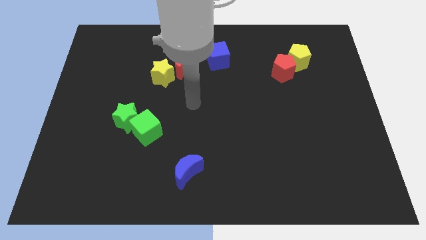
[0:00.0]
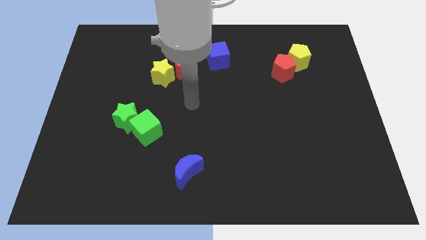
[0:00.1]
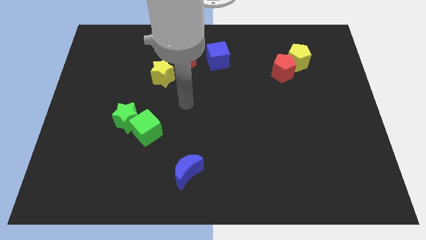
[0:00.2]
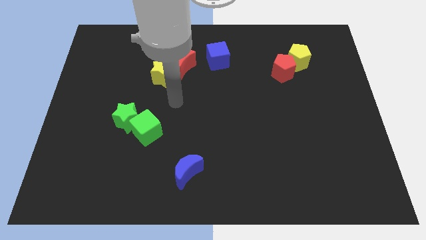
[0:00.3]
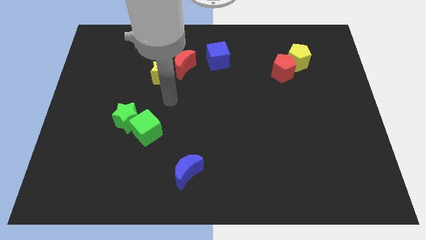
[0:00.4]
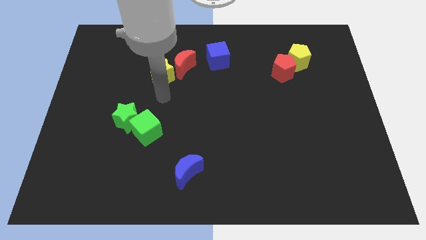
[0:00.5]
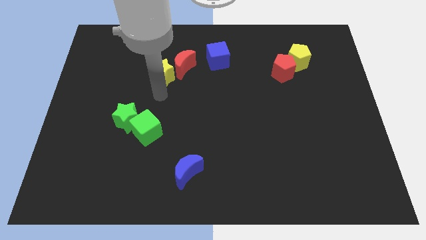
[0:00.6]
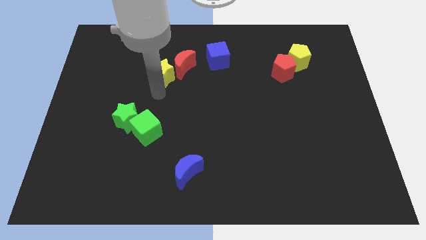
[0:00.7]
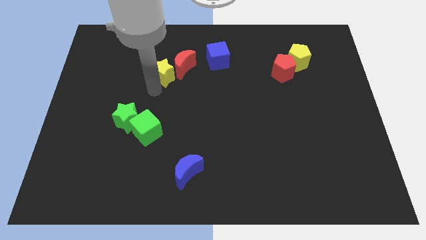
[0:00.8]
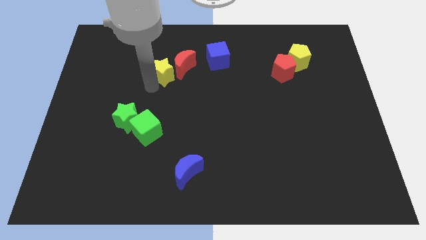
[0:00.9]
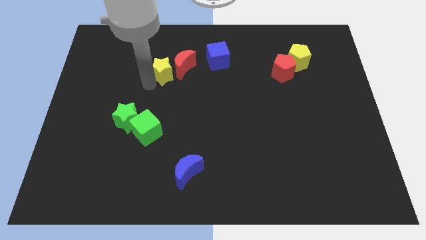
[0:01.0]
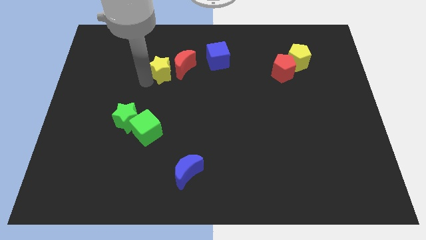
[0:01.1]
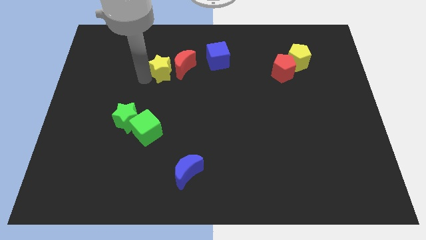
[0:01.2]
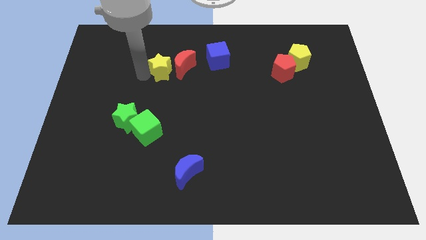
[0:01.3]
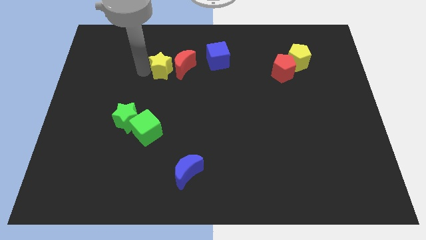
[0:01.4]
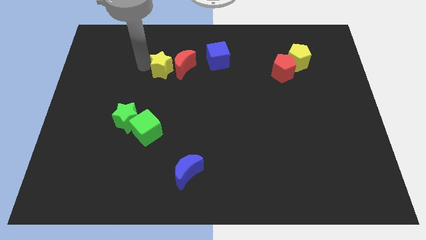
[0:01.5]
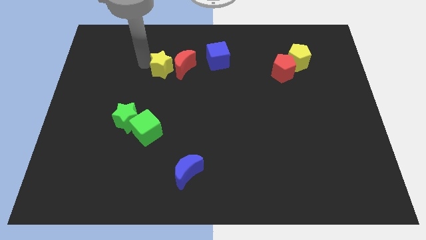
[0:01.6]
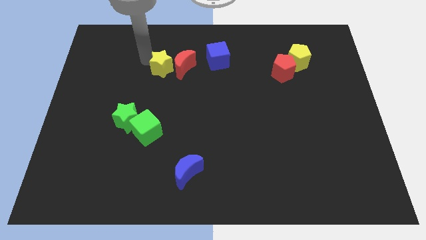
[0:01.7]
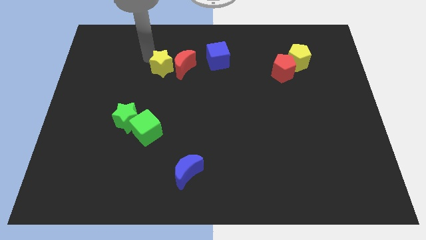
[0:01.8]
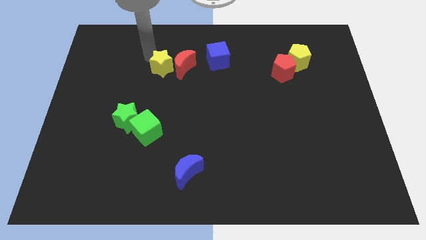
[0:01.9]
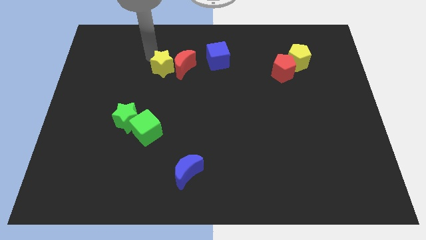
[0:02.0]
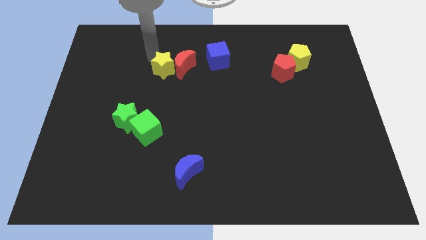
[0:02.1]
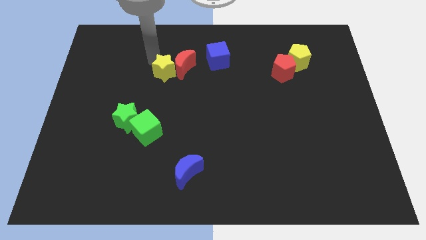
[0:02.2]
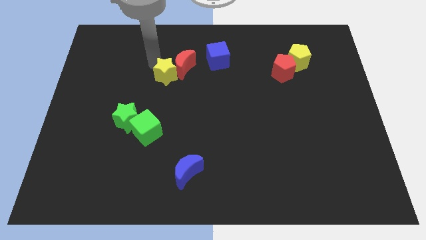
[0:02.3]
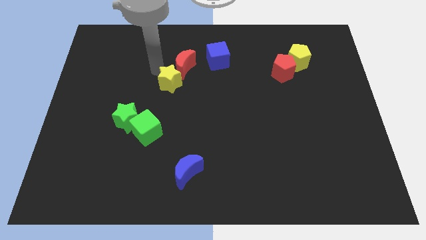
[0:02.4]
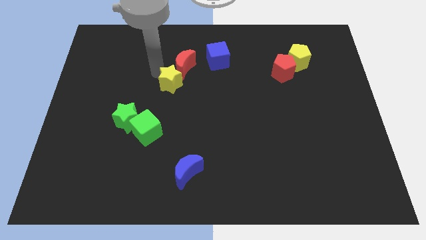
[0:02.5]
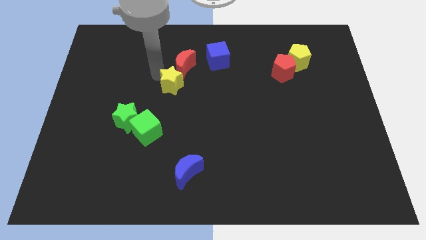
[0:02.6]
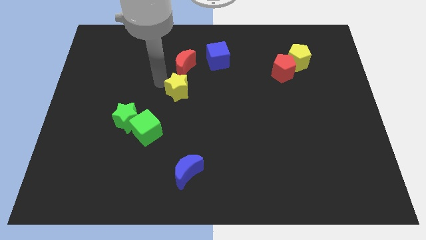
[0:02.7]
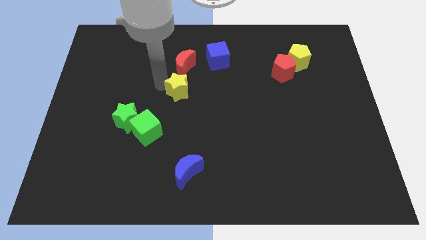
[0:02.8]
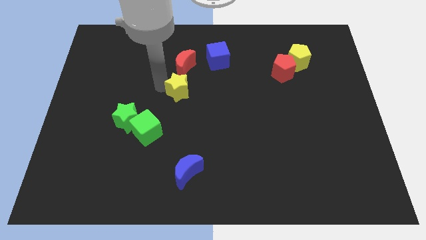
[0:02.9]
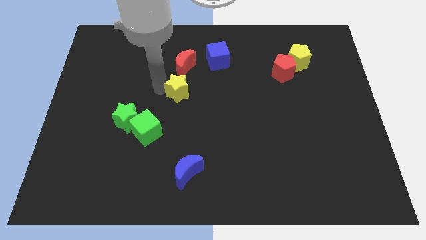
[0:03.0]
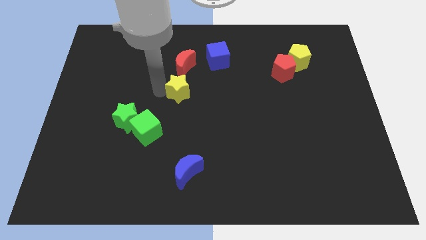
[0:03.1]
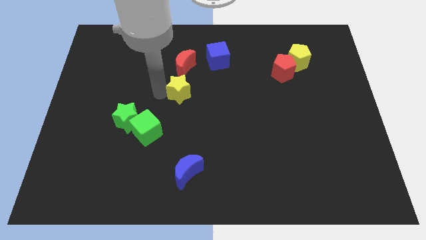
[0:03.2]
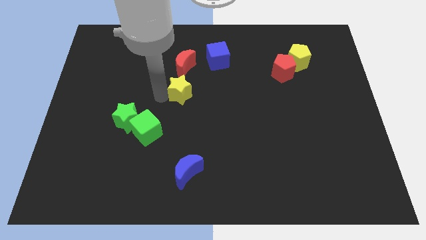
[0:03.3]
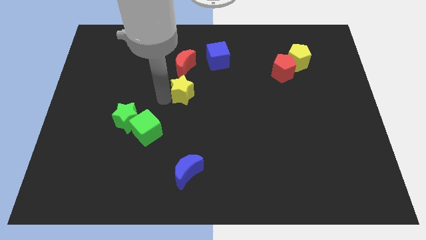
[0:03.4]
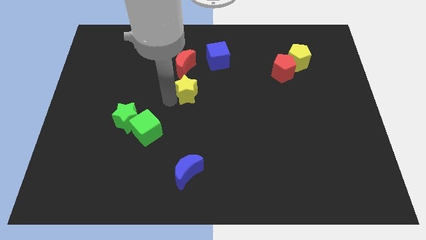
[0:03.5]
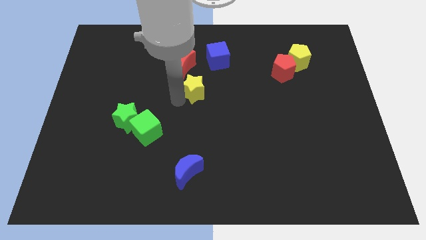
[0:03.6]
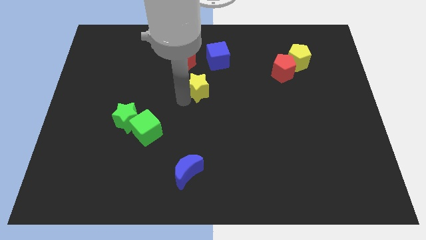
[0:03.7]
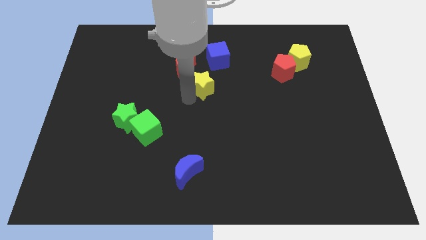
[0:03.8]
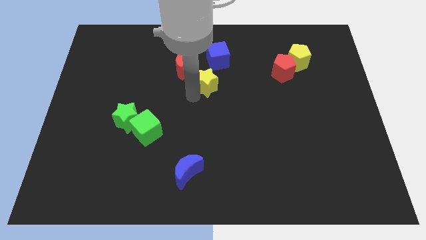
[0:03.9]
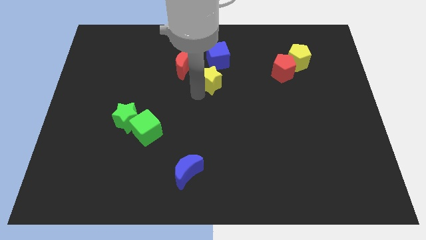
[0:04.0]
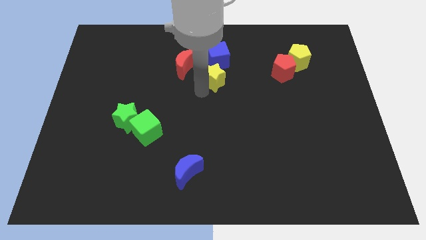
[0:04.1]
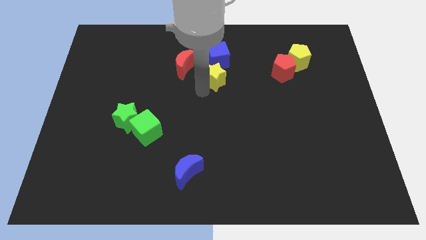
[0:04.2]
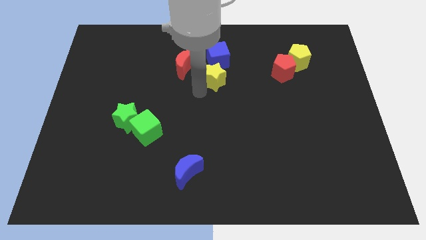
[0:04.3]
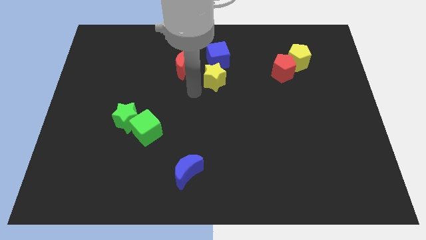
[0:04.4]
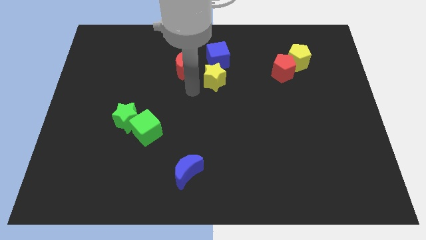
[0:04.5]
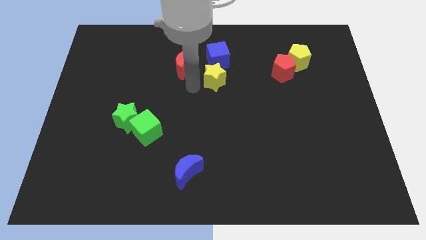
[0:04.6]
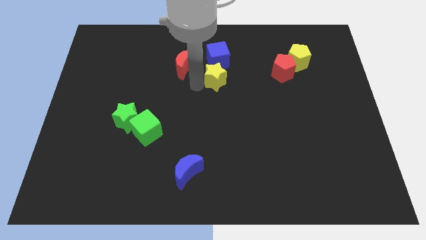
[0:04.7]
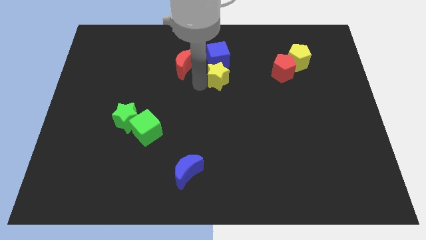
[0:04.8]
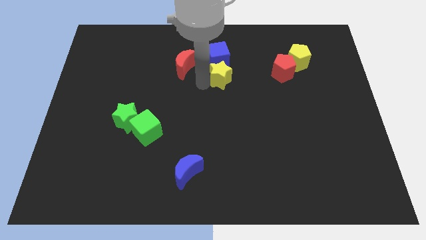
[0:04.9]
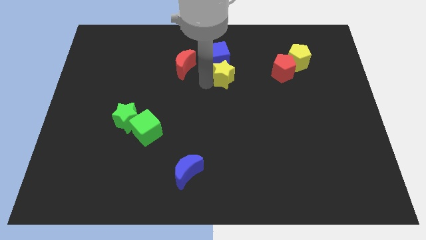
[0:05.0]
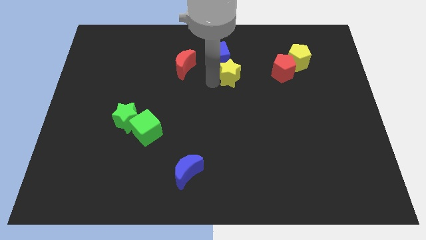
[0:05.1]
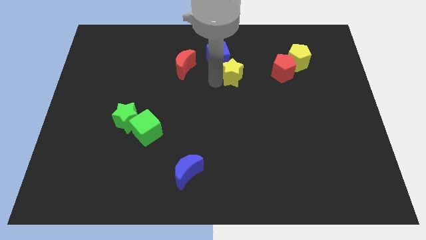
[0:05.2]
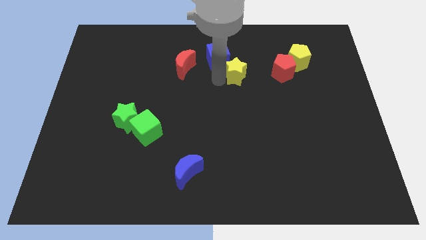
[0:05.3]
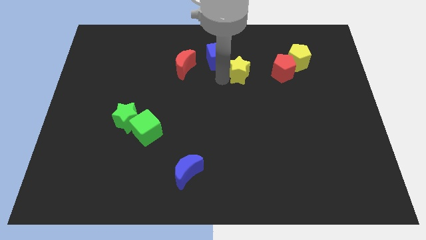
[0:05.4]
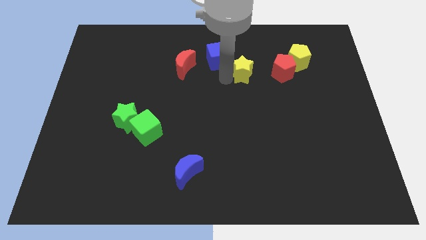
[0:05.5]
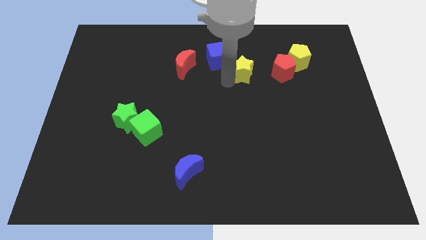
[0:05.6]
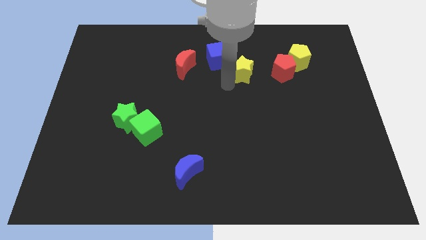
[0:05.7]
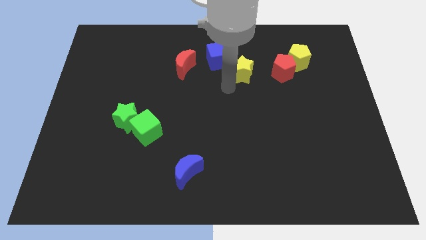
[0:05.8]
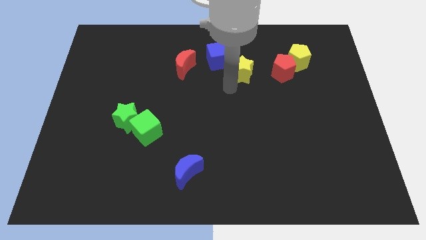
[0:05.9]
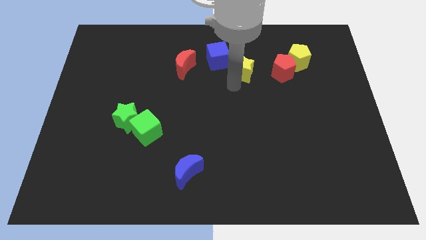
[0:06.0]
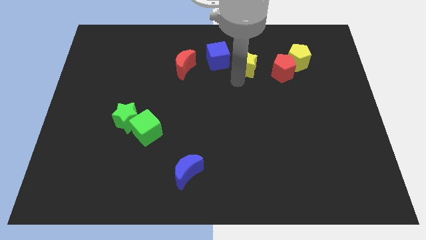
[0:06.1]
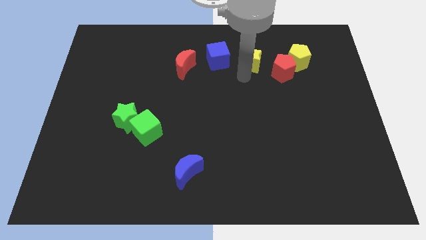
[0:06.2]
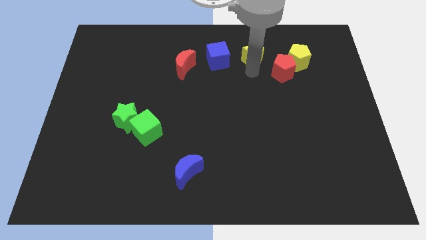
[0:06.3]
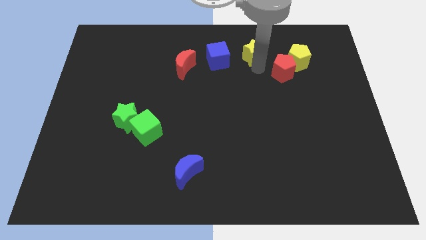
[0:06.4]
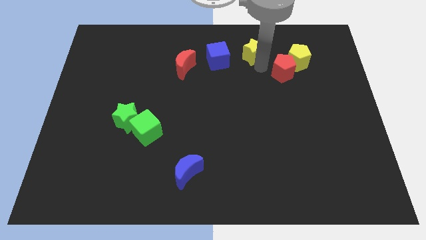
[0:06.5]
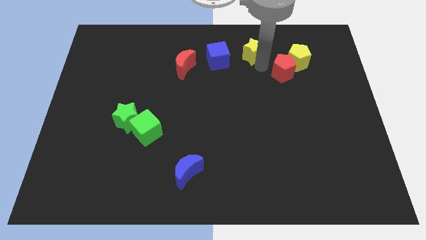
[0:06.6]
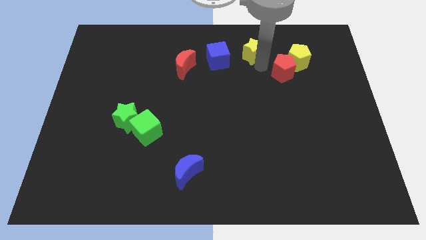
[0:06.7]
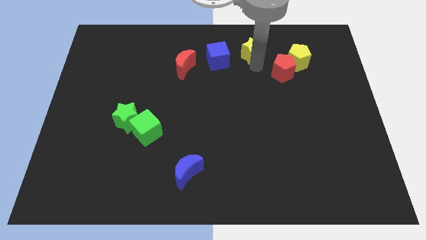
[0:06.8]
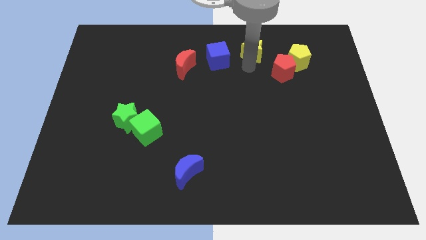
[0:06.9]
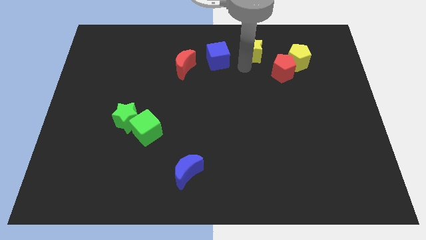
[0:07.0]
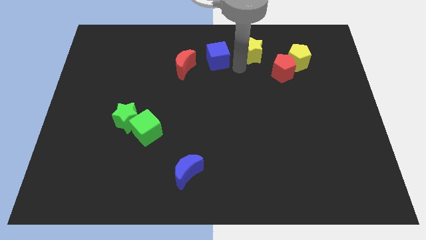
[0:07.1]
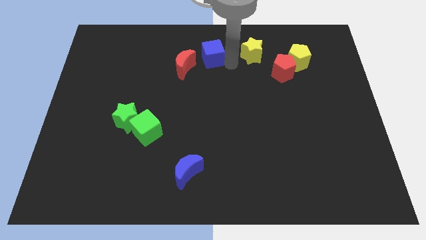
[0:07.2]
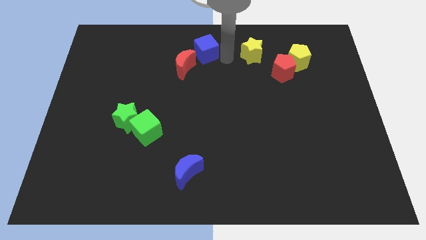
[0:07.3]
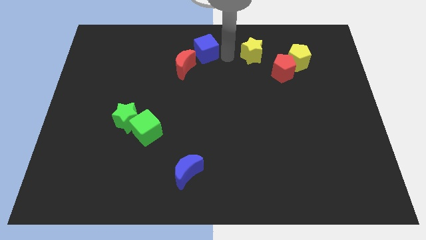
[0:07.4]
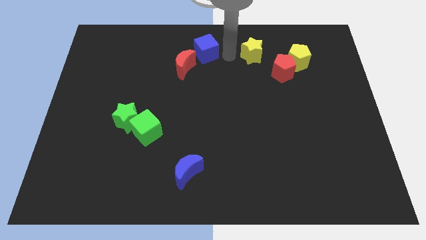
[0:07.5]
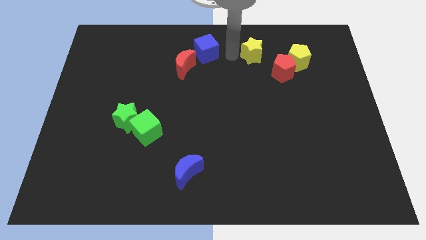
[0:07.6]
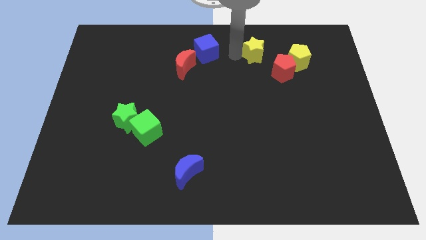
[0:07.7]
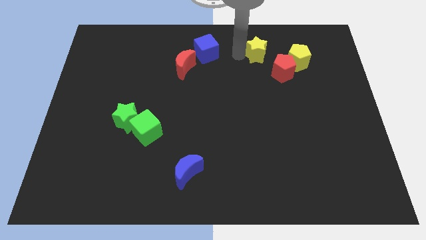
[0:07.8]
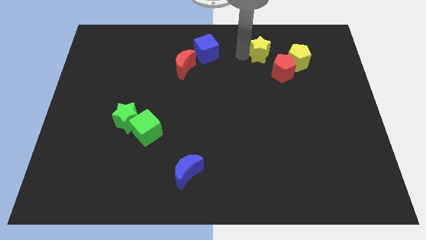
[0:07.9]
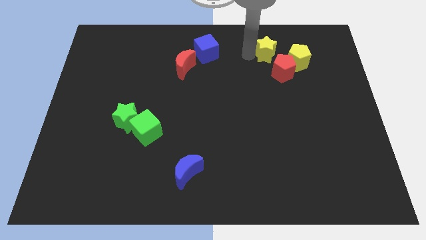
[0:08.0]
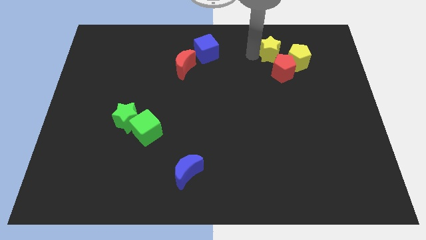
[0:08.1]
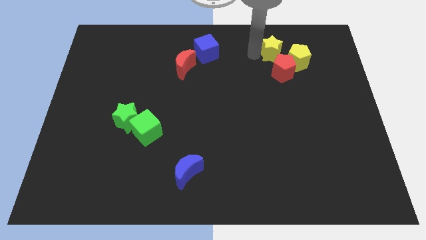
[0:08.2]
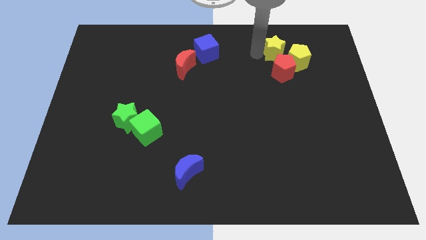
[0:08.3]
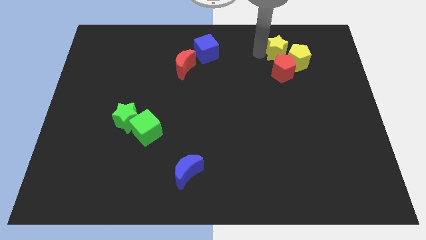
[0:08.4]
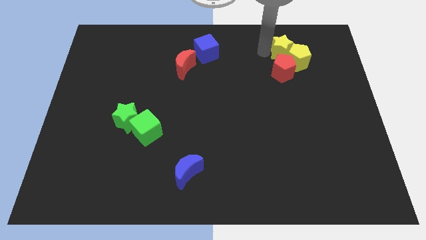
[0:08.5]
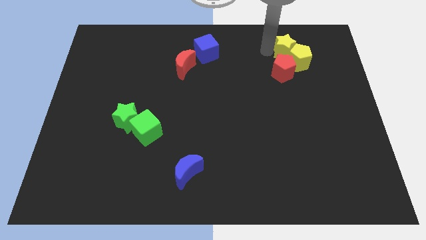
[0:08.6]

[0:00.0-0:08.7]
put the yellow star next to the yellow pentagon
